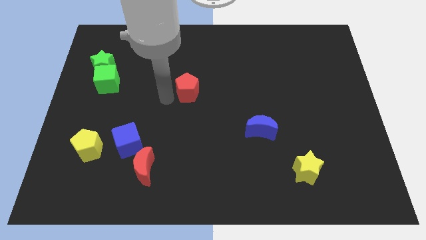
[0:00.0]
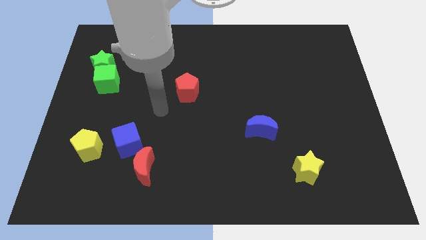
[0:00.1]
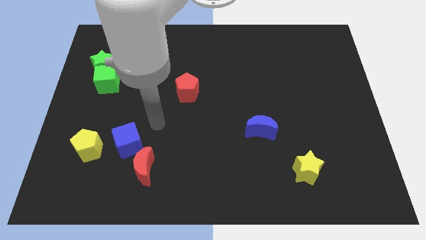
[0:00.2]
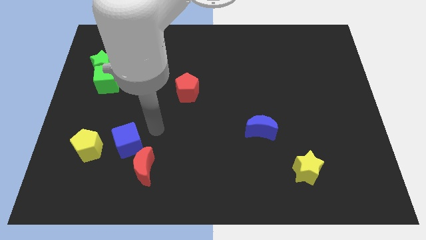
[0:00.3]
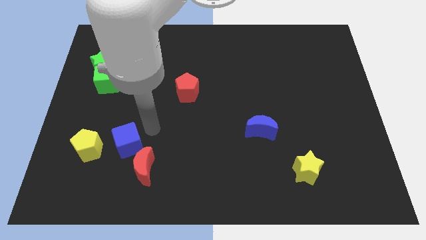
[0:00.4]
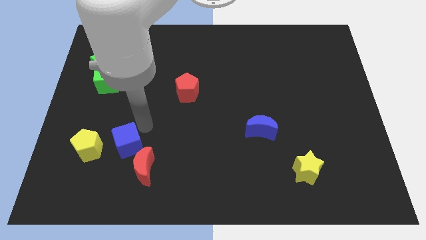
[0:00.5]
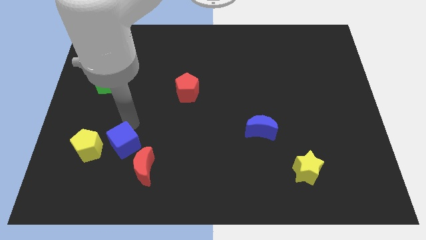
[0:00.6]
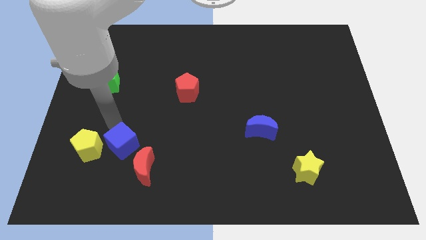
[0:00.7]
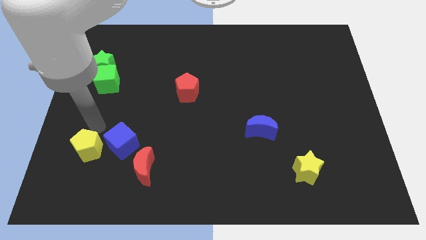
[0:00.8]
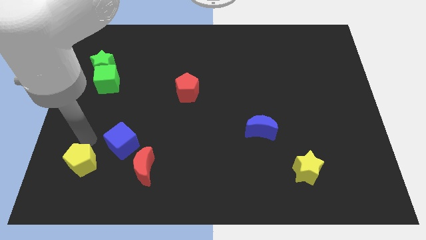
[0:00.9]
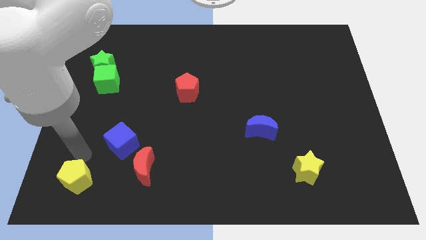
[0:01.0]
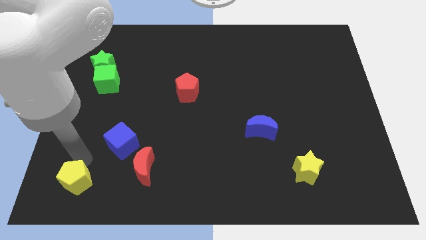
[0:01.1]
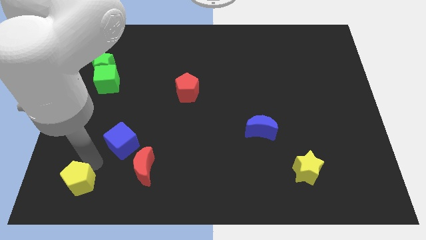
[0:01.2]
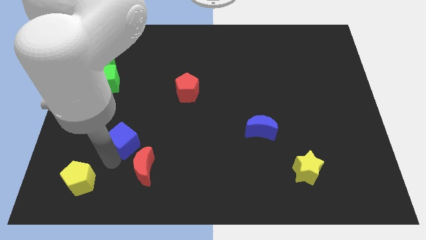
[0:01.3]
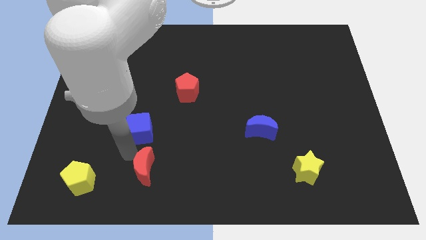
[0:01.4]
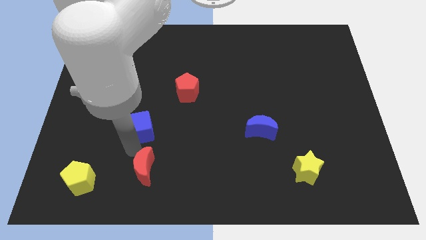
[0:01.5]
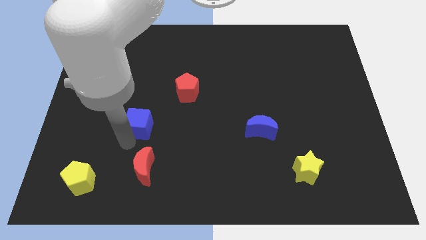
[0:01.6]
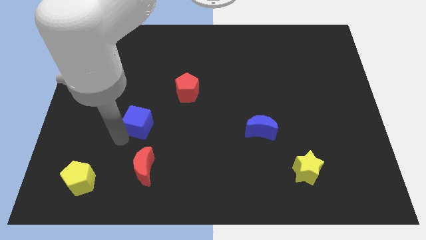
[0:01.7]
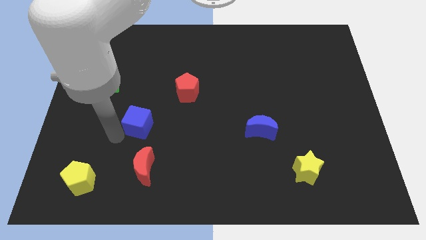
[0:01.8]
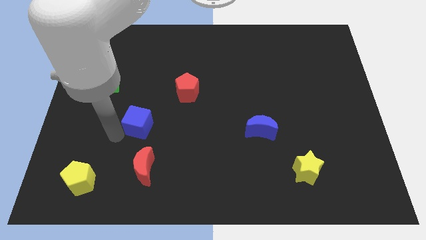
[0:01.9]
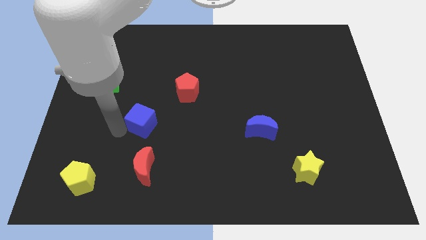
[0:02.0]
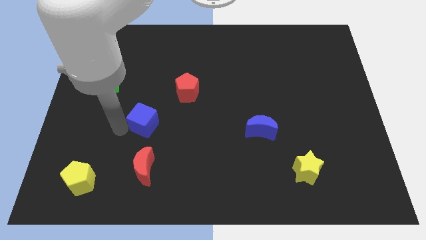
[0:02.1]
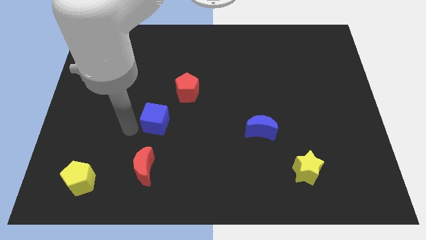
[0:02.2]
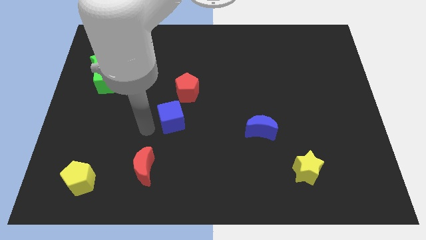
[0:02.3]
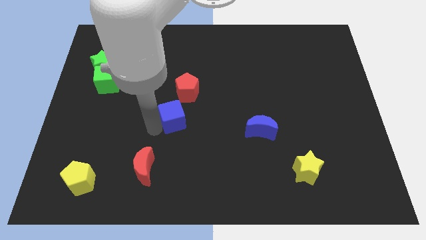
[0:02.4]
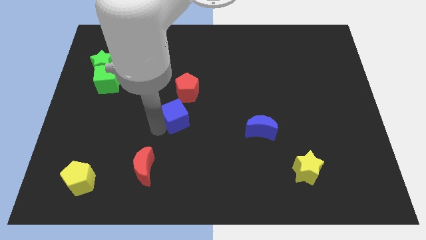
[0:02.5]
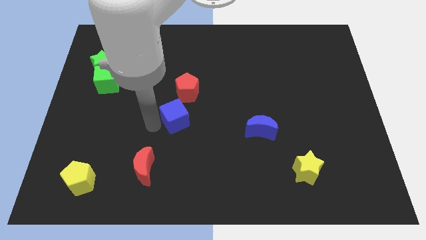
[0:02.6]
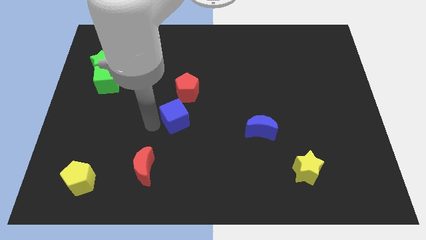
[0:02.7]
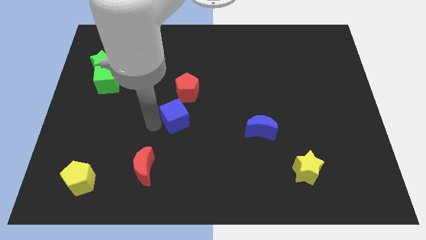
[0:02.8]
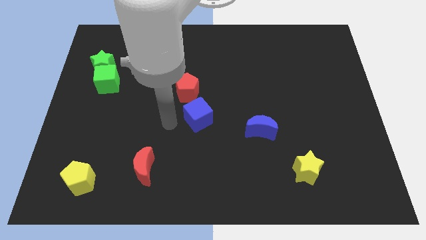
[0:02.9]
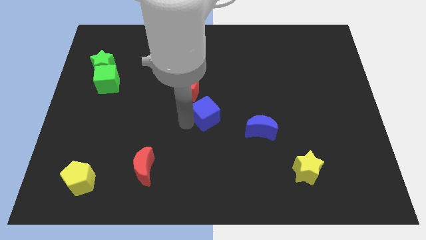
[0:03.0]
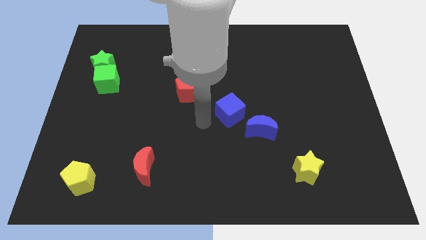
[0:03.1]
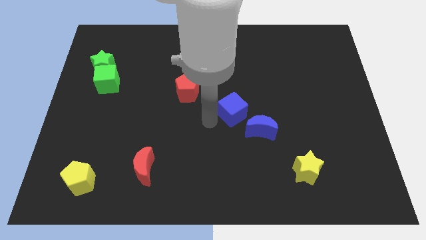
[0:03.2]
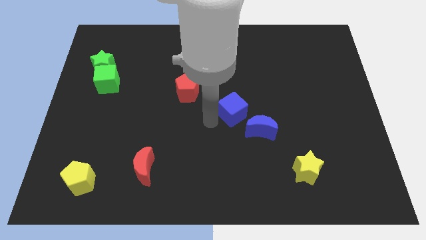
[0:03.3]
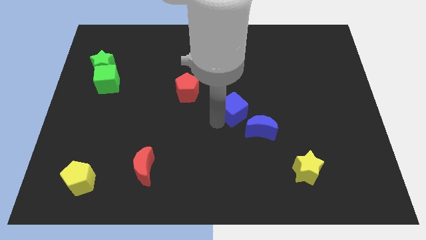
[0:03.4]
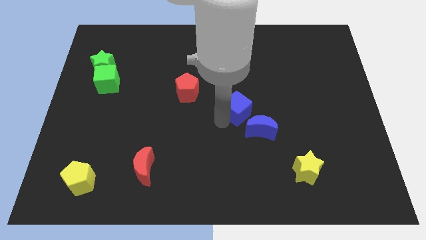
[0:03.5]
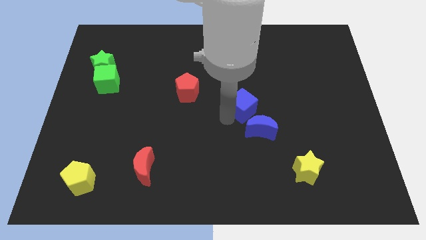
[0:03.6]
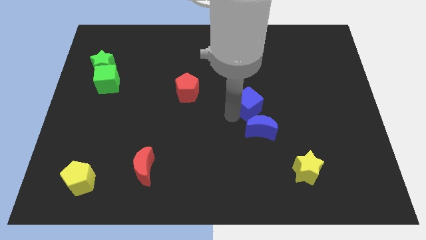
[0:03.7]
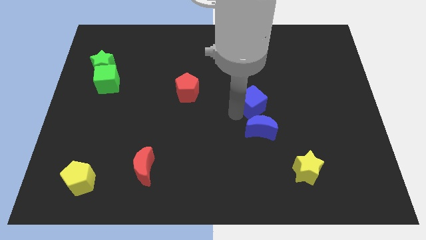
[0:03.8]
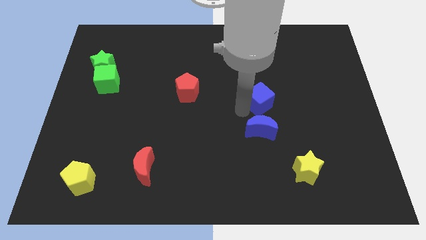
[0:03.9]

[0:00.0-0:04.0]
slide the blue cube towards top of blue moon

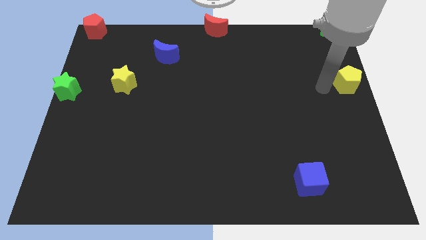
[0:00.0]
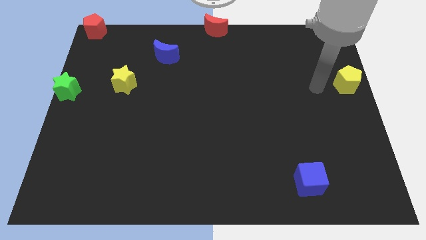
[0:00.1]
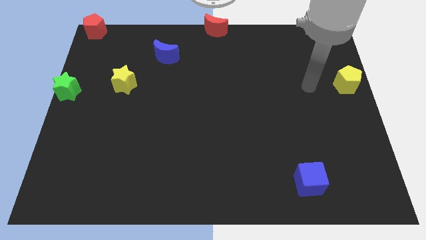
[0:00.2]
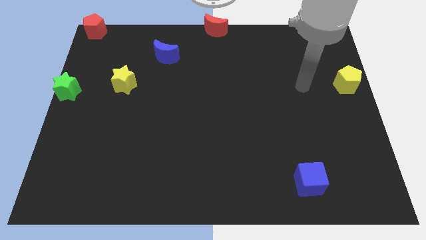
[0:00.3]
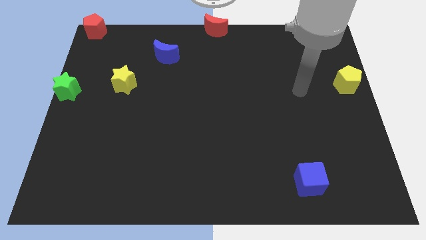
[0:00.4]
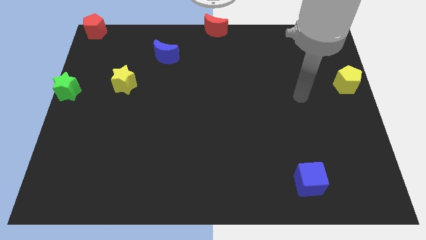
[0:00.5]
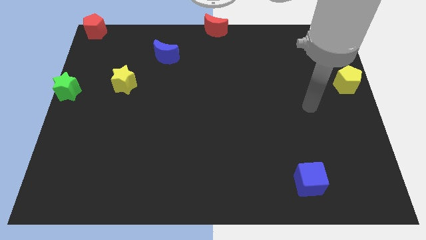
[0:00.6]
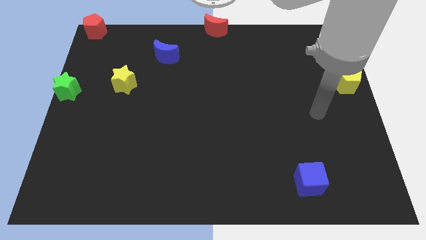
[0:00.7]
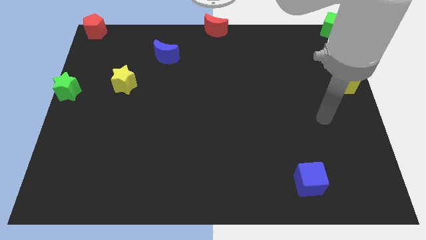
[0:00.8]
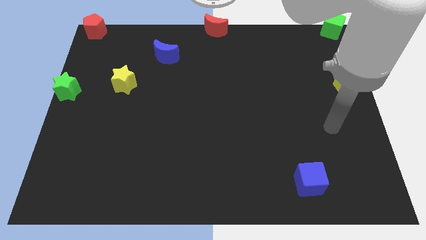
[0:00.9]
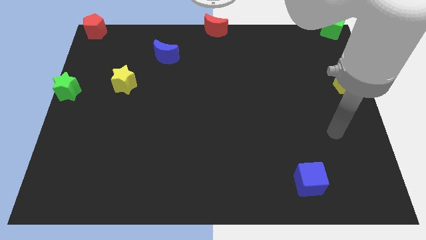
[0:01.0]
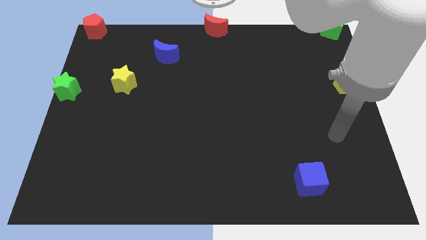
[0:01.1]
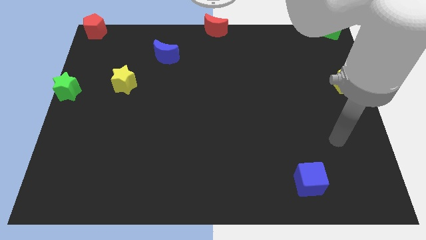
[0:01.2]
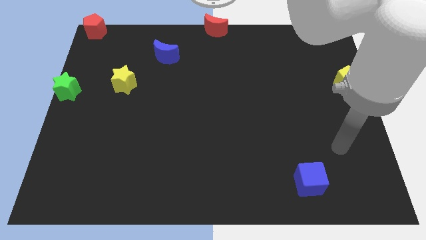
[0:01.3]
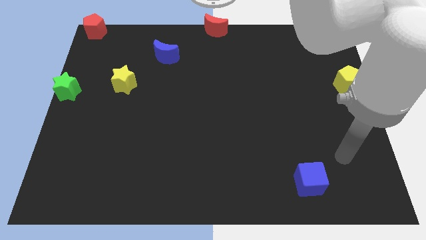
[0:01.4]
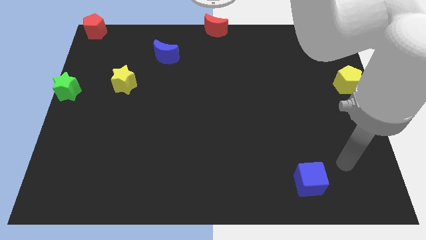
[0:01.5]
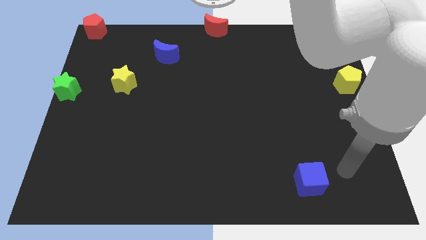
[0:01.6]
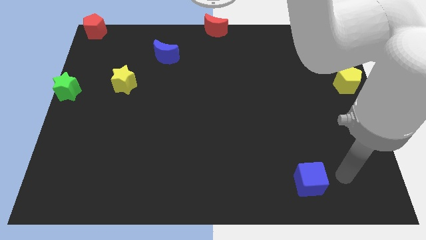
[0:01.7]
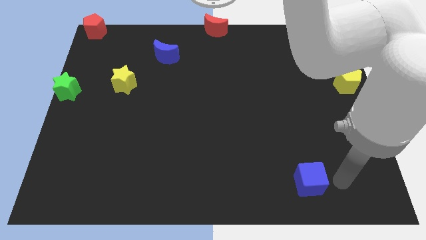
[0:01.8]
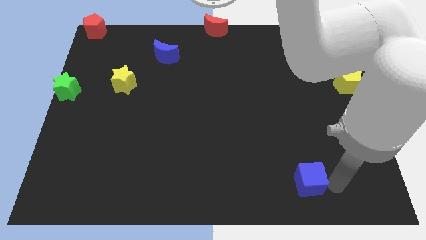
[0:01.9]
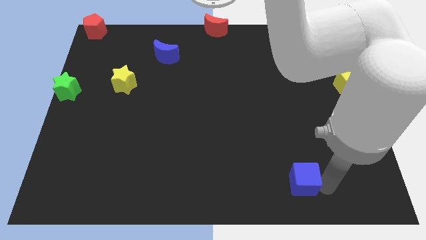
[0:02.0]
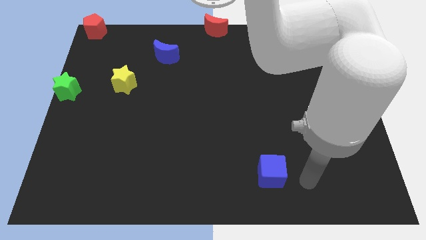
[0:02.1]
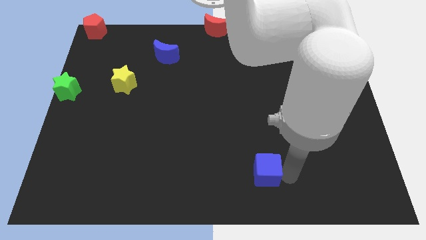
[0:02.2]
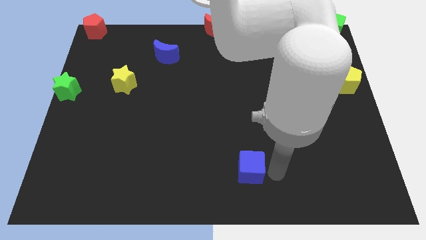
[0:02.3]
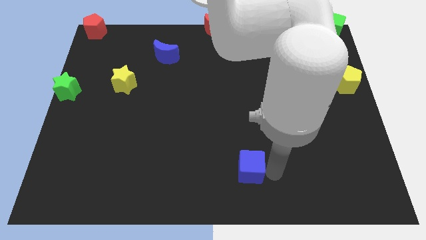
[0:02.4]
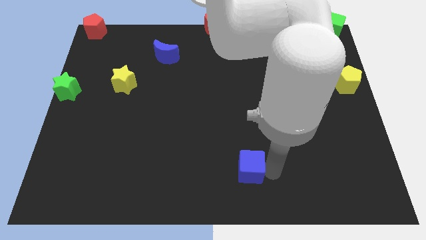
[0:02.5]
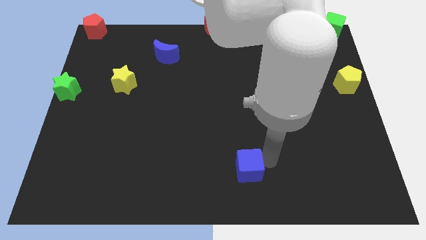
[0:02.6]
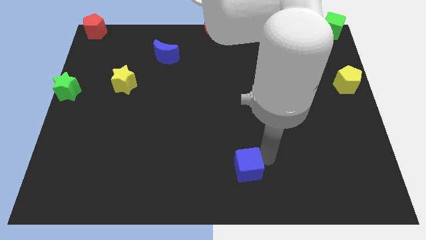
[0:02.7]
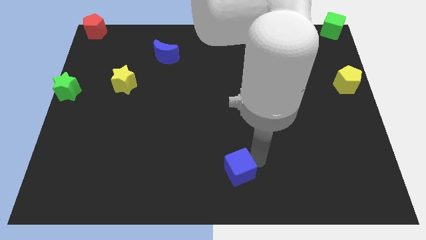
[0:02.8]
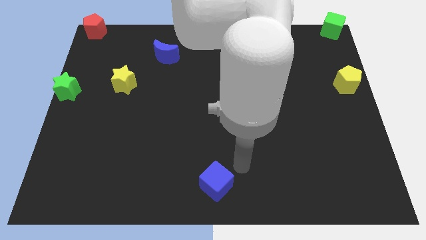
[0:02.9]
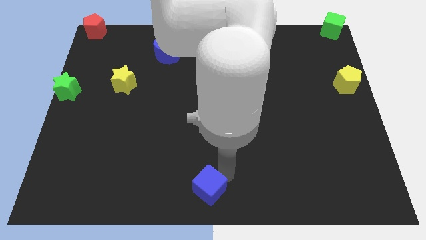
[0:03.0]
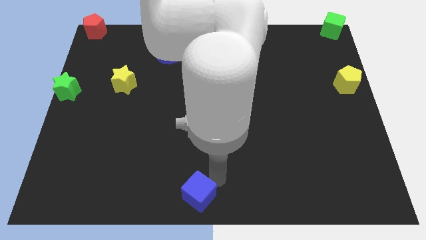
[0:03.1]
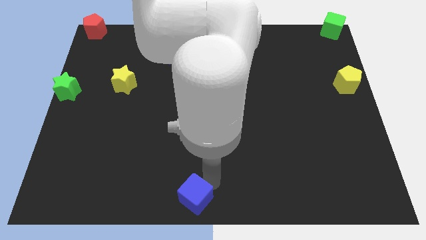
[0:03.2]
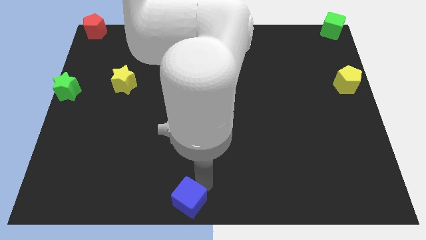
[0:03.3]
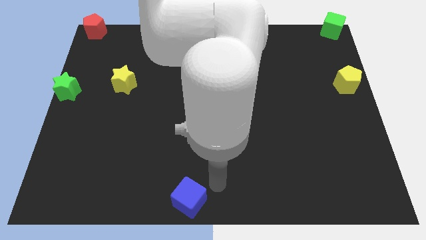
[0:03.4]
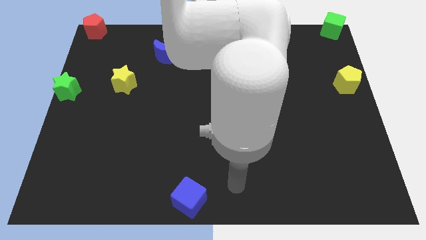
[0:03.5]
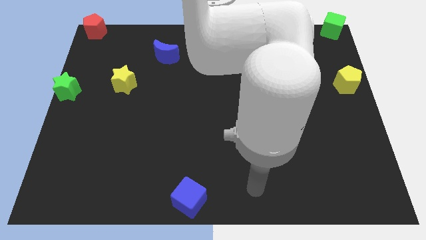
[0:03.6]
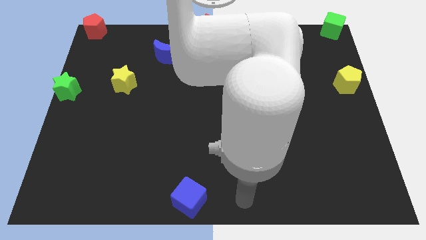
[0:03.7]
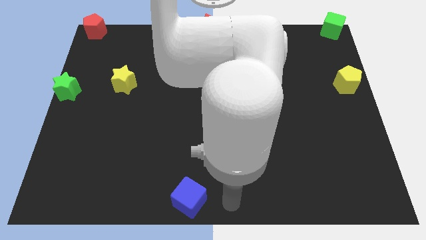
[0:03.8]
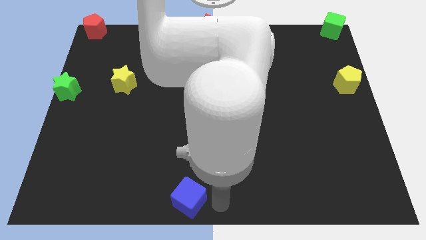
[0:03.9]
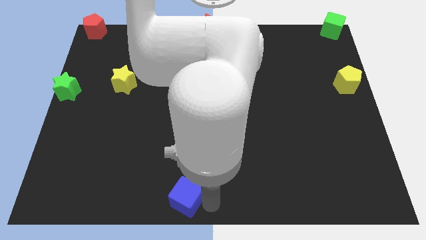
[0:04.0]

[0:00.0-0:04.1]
push the blue cube towards the bottom center of the board

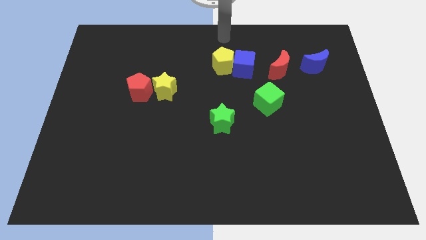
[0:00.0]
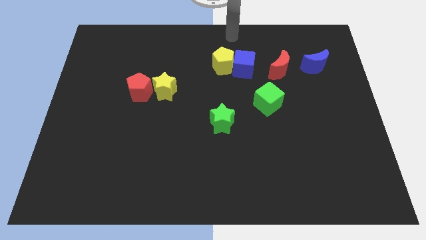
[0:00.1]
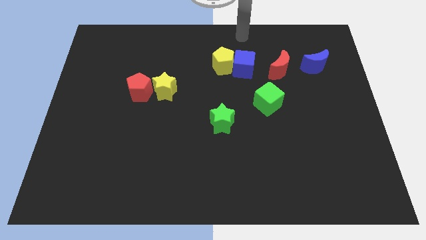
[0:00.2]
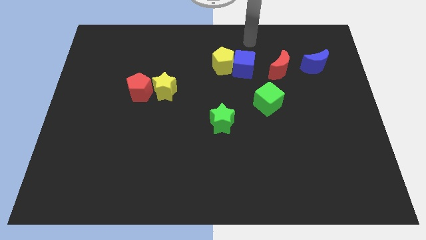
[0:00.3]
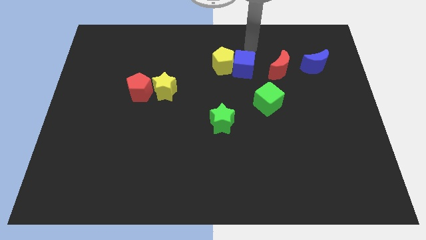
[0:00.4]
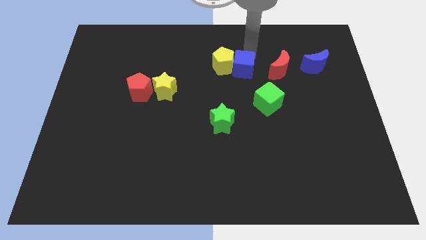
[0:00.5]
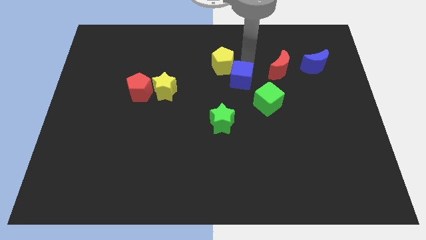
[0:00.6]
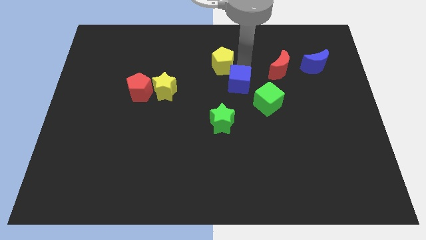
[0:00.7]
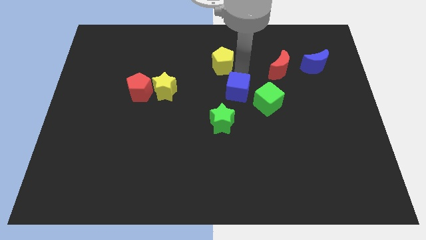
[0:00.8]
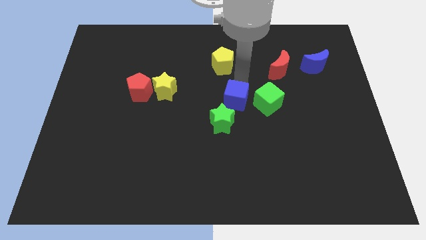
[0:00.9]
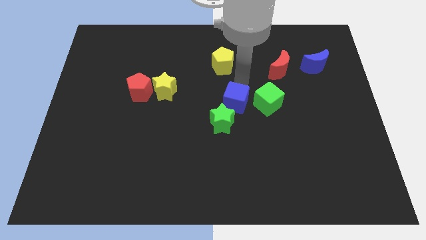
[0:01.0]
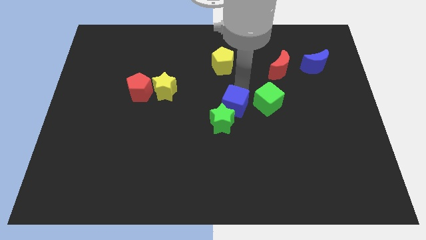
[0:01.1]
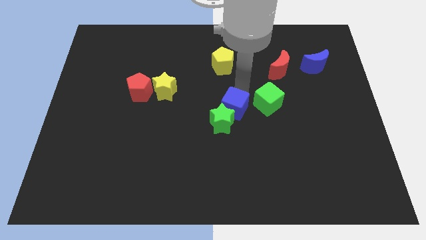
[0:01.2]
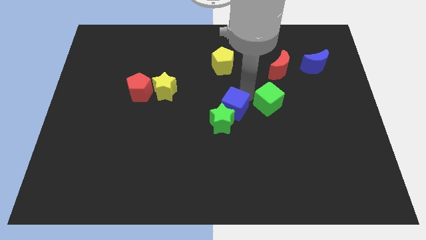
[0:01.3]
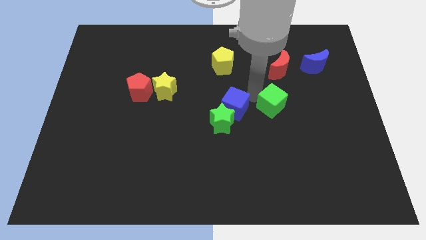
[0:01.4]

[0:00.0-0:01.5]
push the blue cube into the green star
